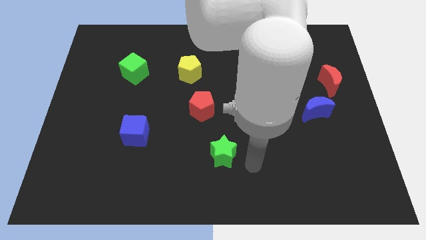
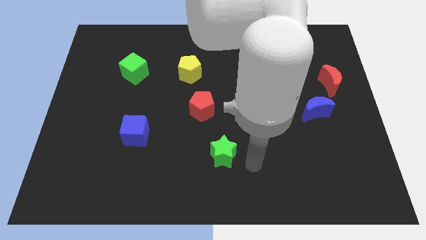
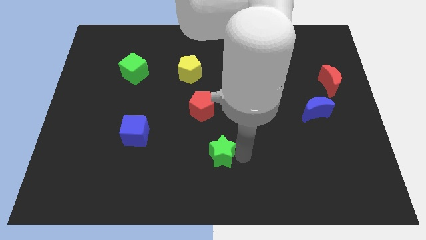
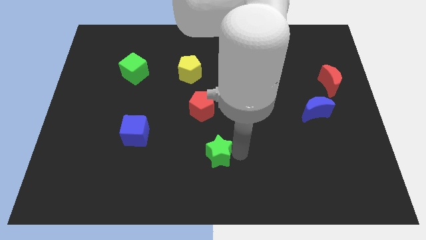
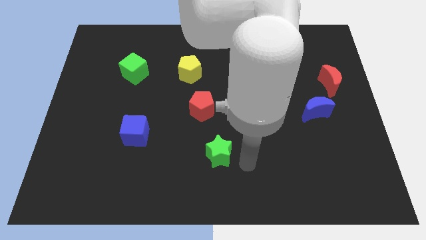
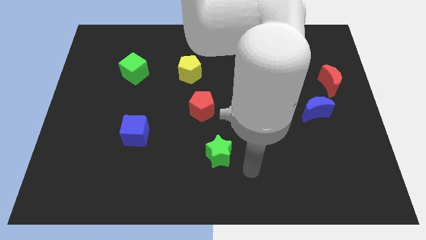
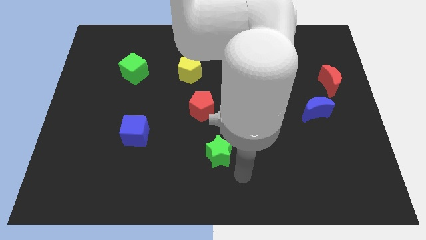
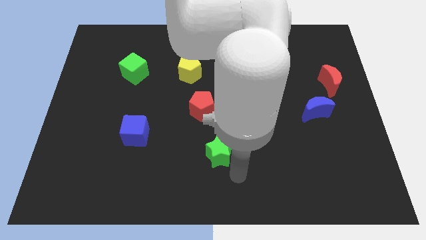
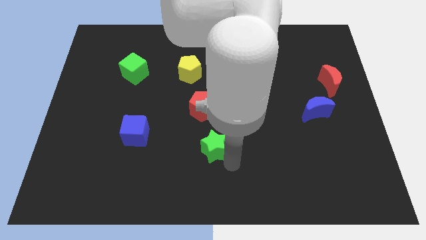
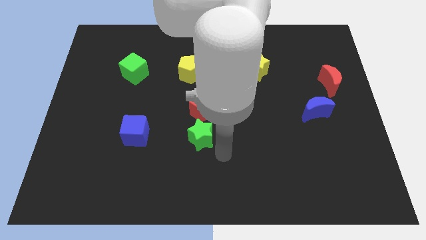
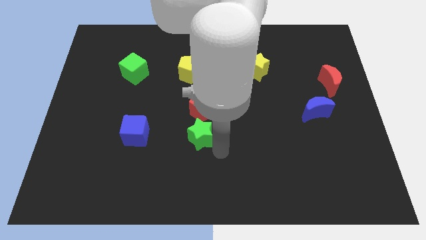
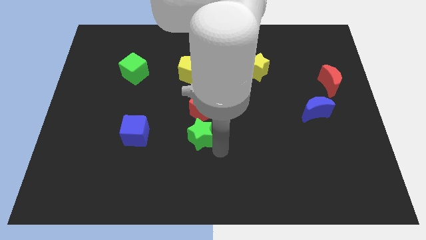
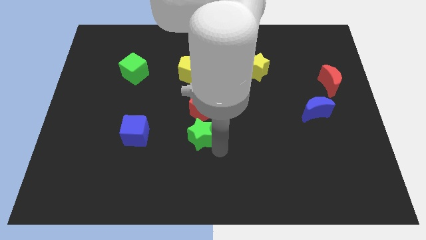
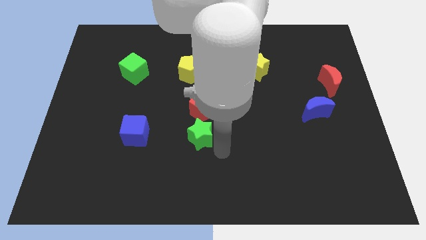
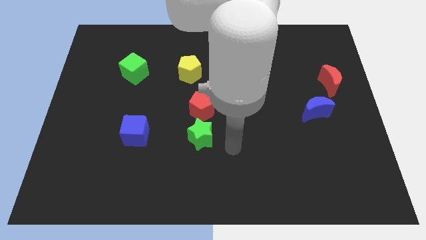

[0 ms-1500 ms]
move the green star below to the red pentagon

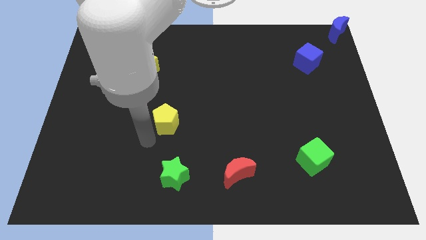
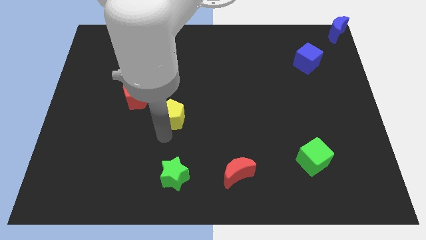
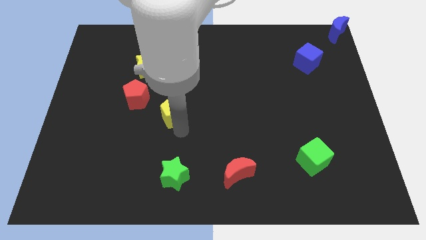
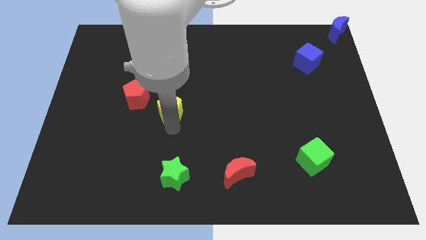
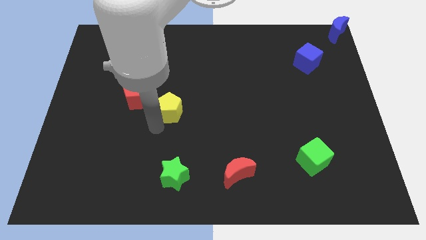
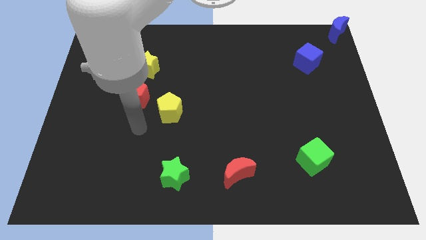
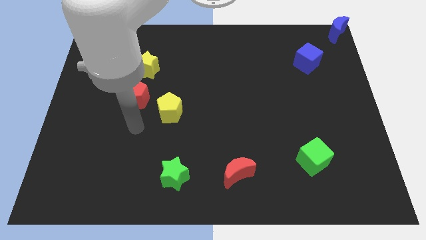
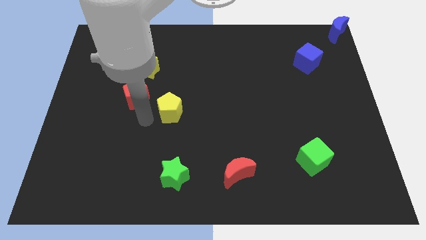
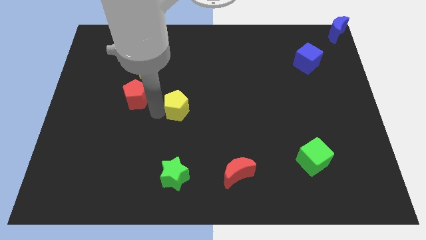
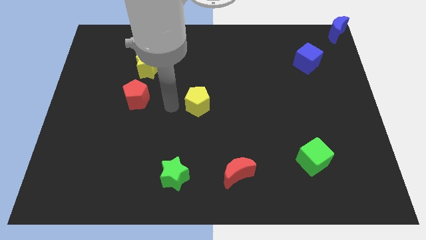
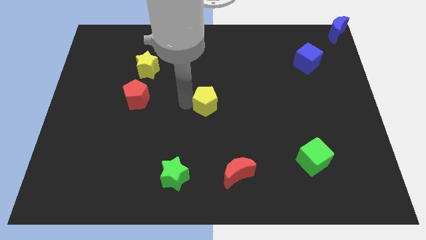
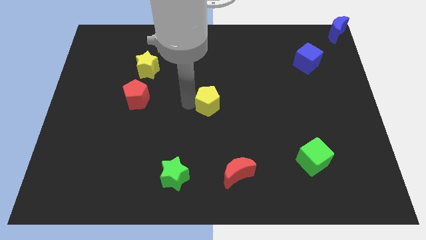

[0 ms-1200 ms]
place the yellow pentagon at the center of the board

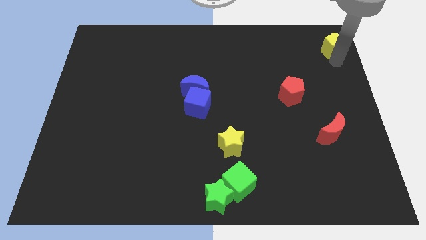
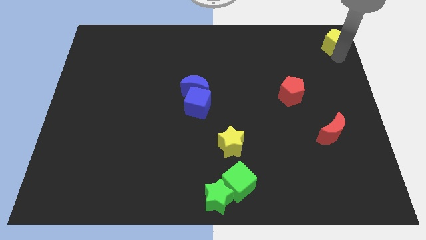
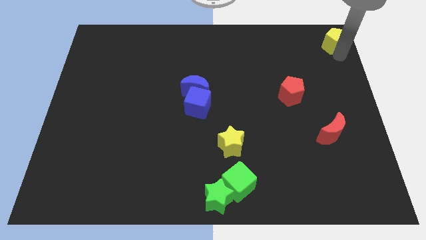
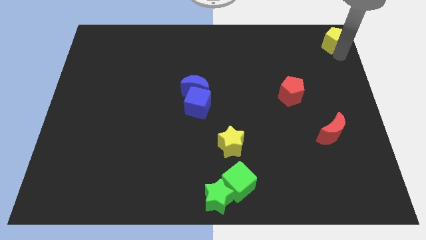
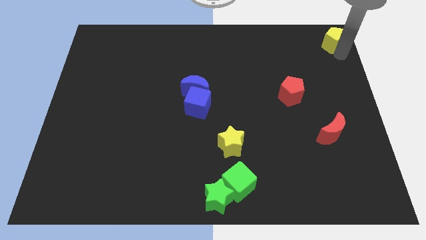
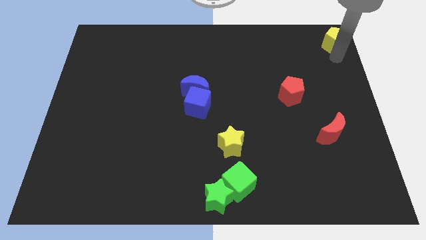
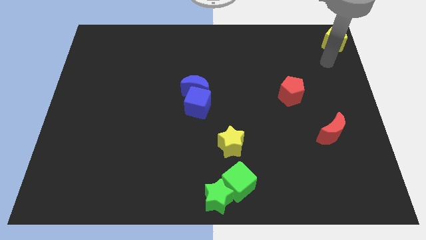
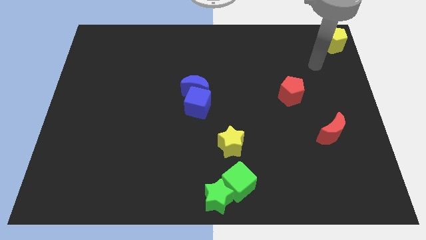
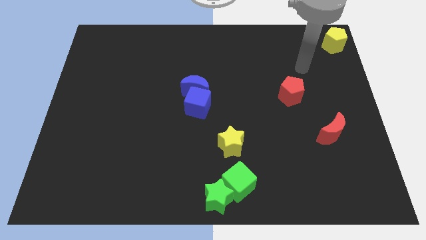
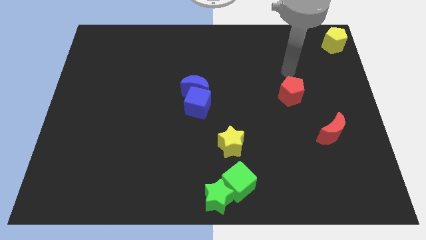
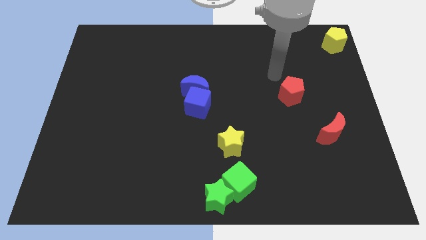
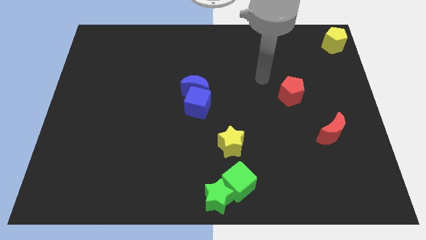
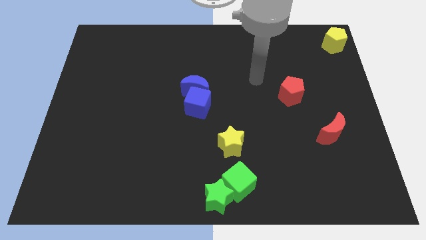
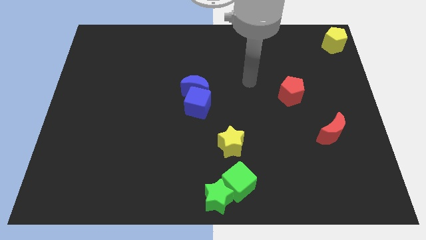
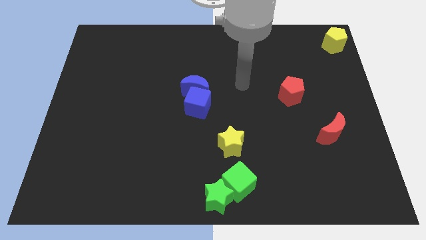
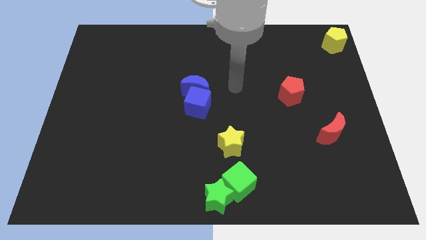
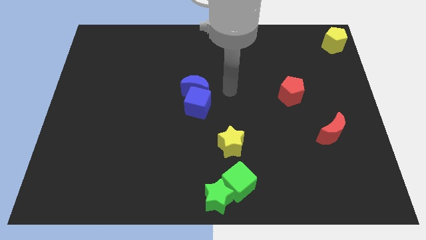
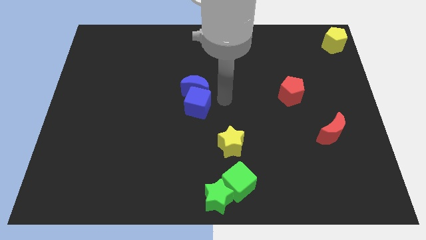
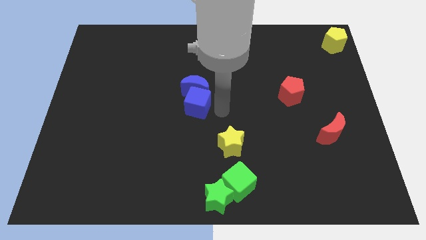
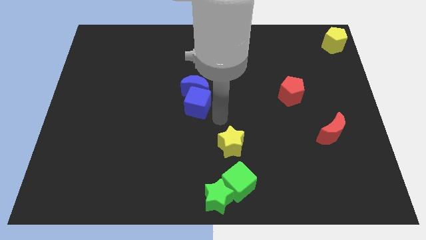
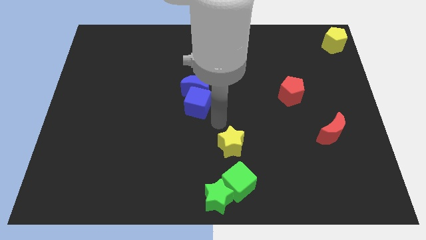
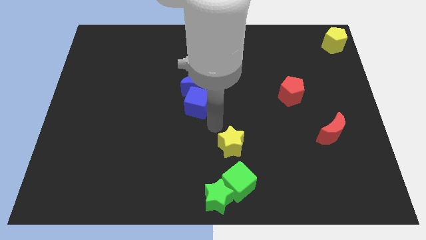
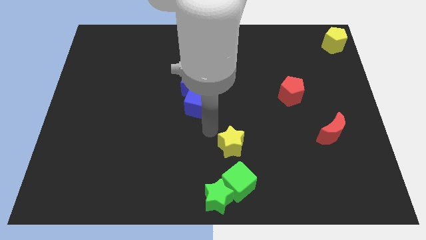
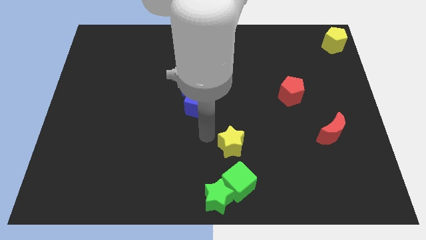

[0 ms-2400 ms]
point your arm to the left of the yellow star

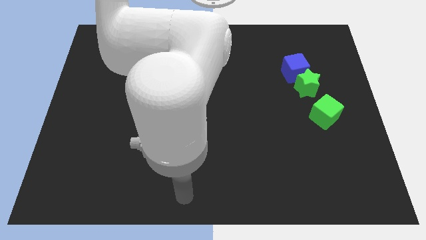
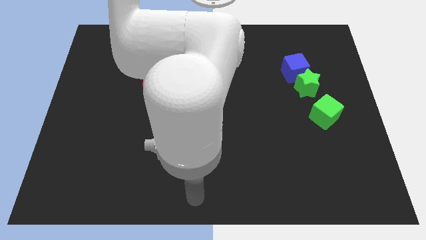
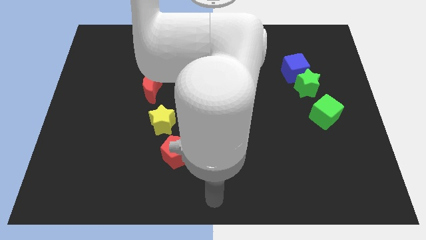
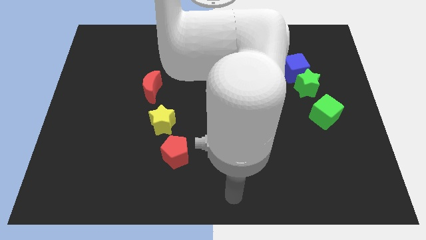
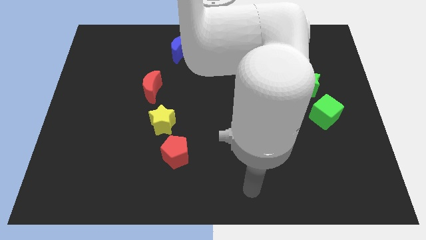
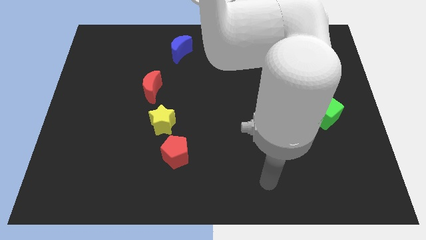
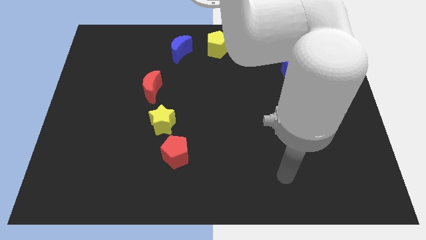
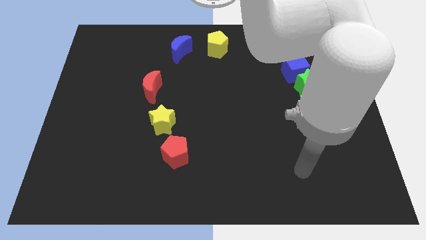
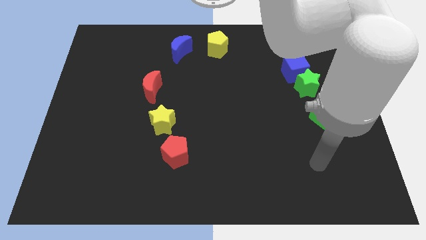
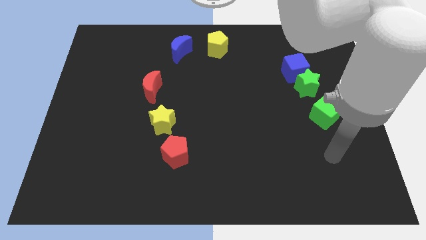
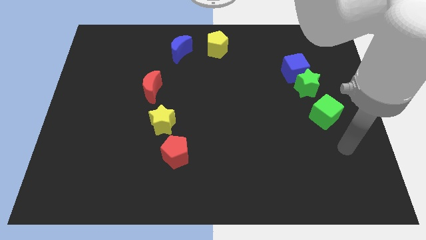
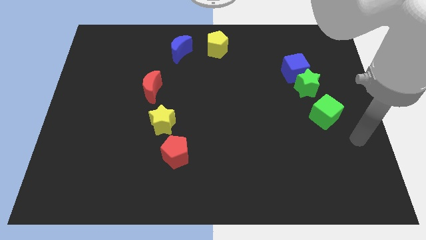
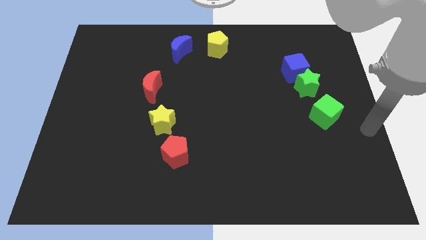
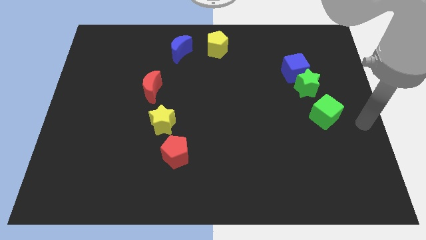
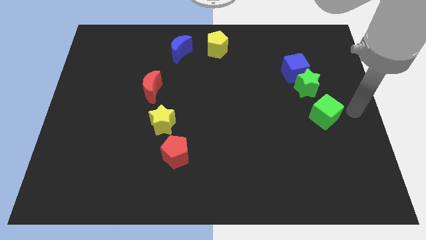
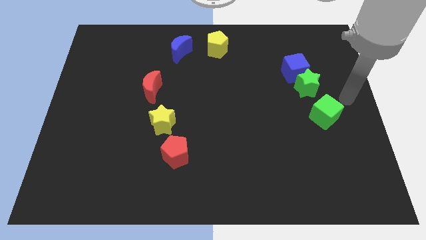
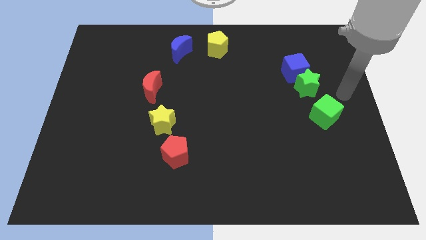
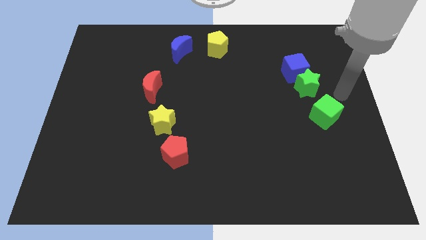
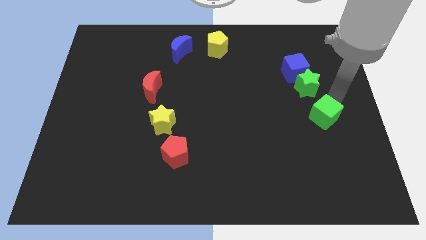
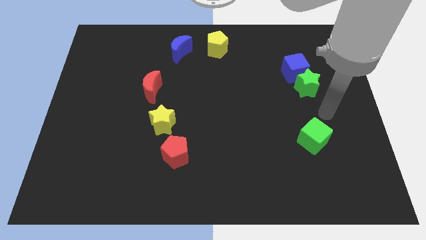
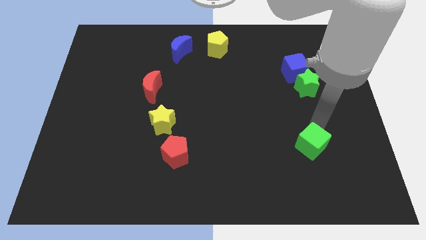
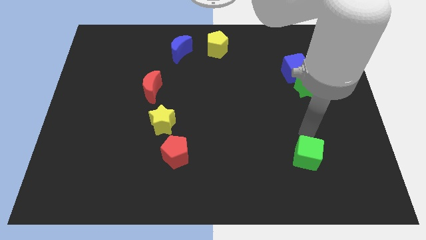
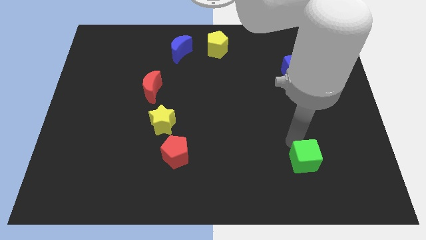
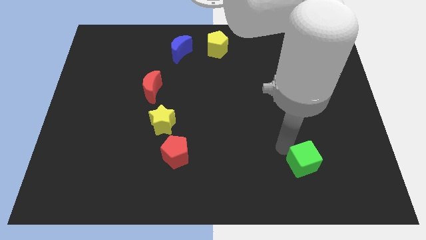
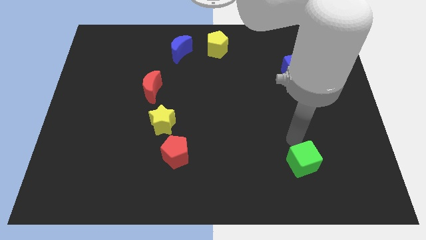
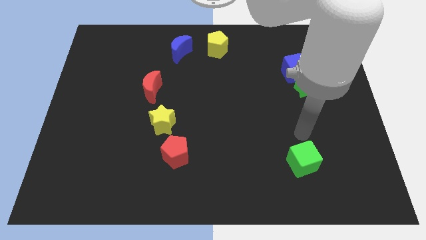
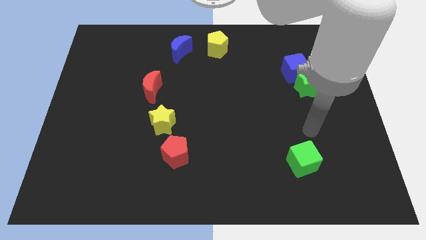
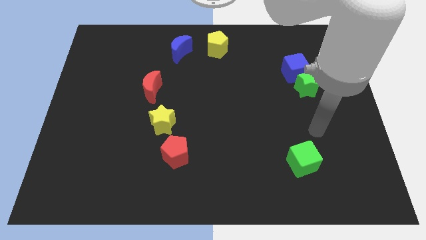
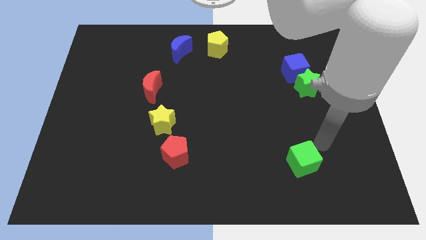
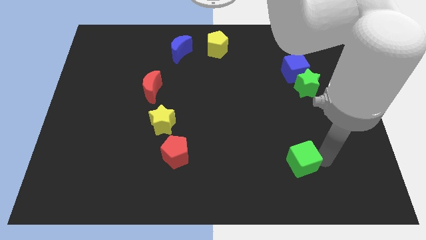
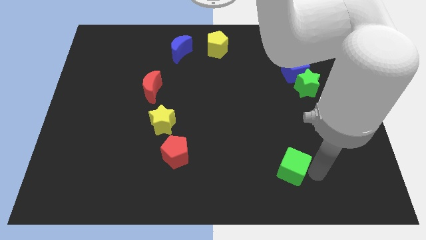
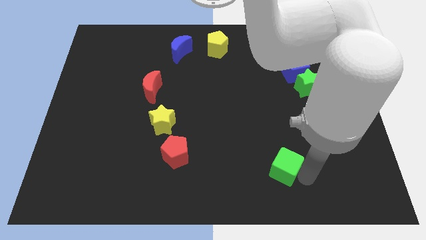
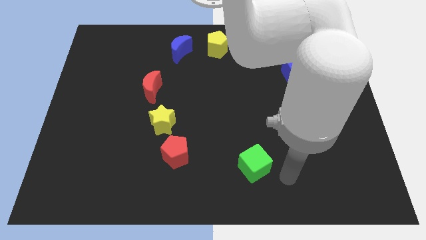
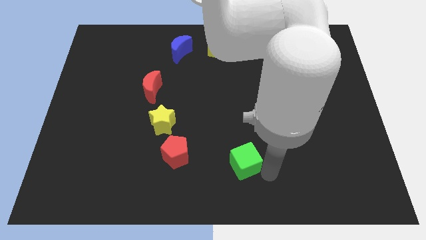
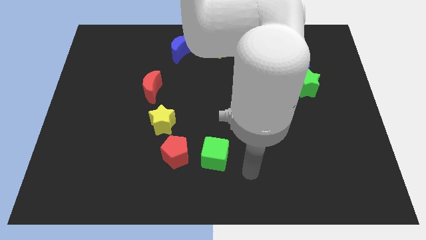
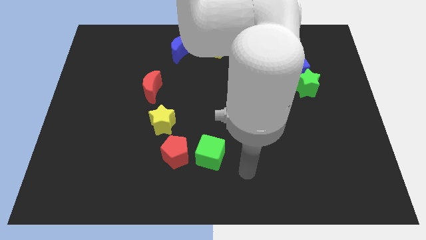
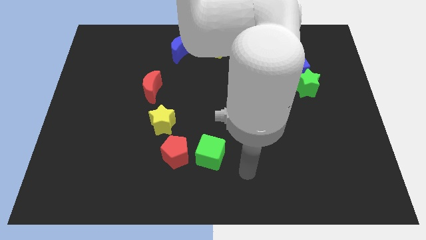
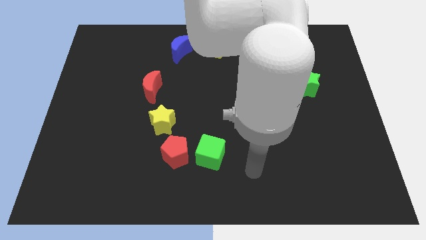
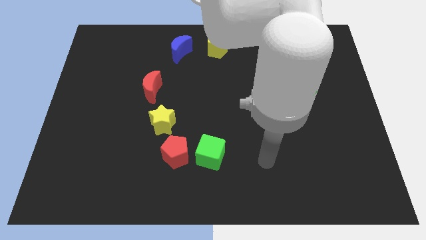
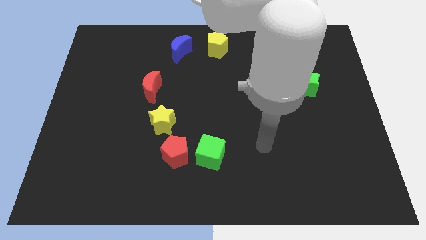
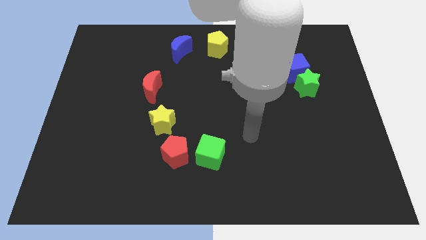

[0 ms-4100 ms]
push the green cube to the right of the red pentagon
